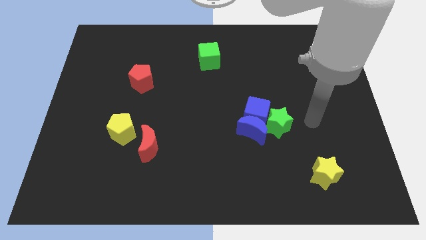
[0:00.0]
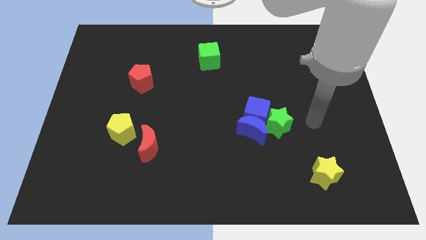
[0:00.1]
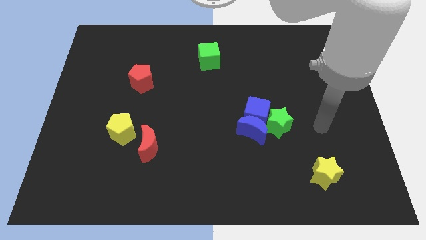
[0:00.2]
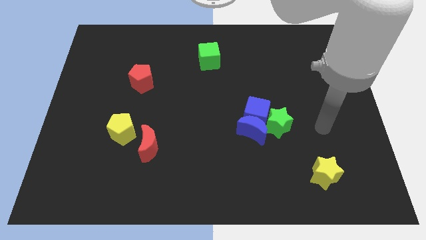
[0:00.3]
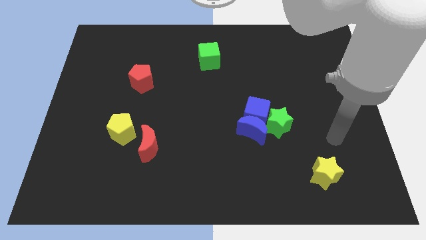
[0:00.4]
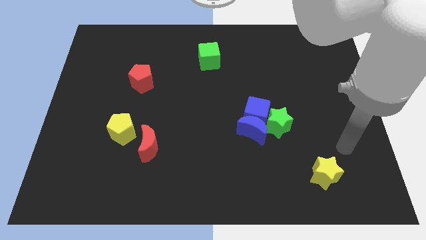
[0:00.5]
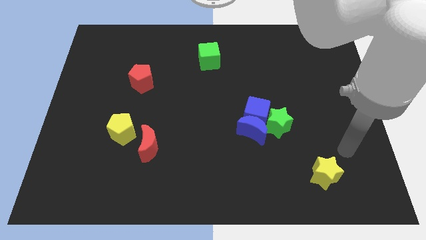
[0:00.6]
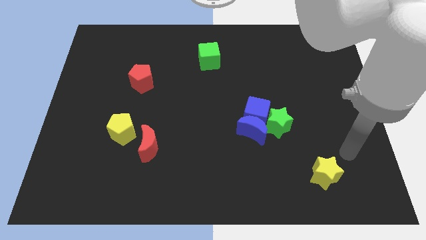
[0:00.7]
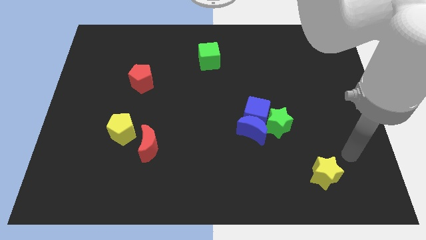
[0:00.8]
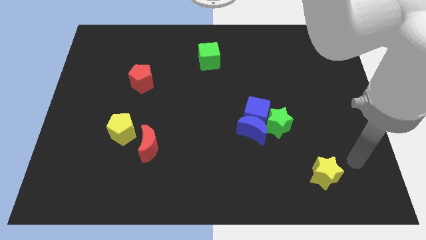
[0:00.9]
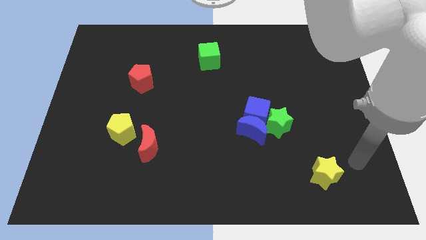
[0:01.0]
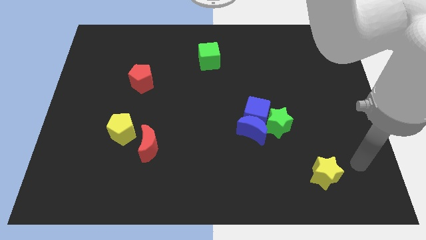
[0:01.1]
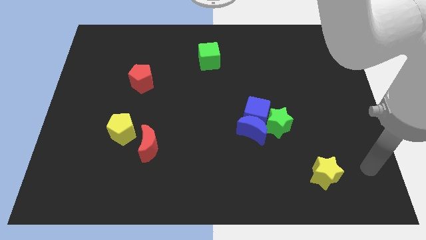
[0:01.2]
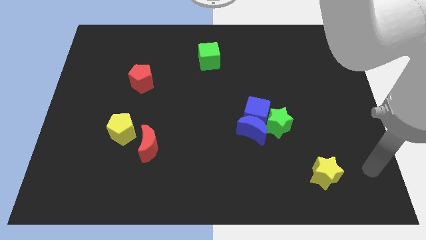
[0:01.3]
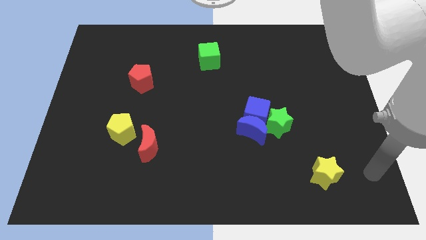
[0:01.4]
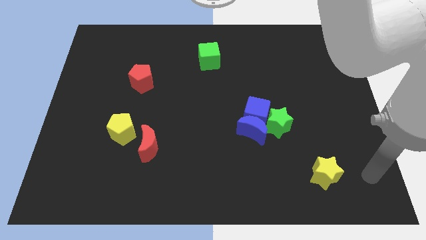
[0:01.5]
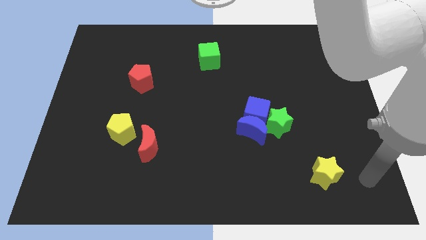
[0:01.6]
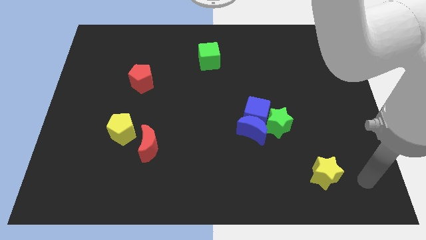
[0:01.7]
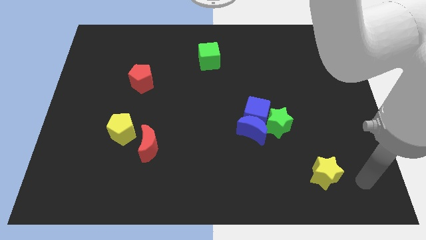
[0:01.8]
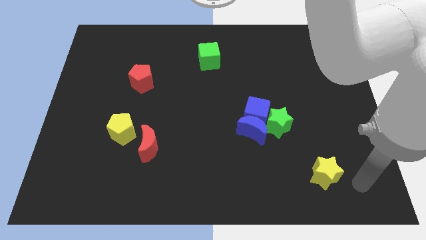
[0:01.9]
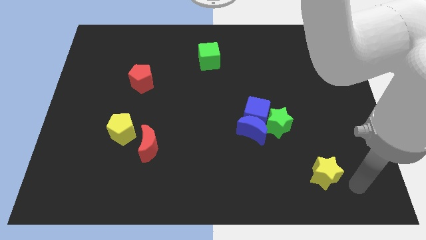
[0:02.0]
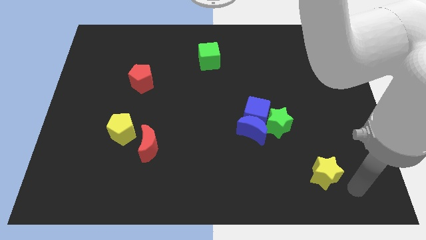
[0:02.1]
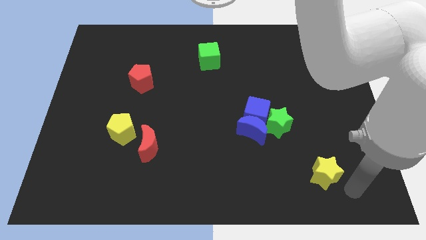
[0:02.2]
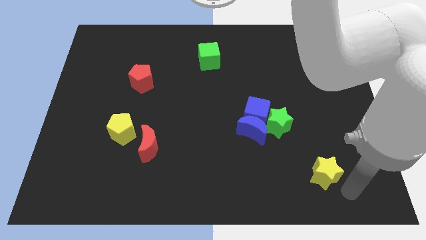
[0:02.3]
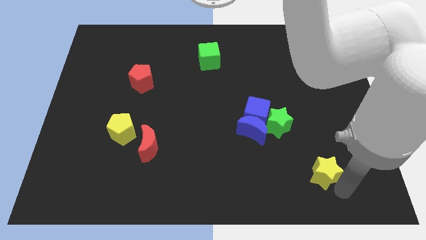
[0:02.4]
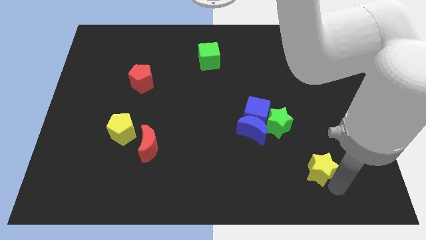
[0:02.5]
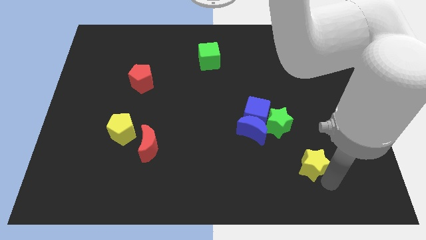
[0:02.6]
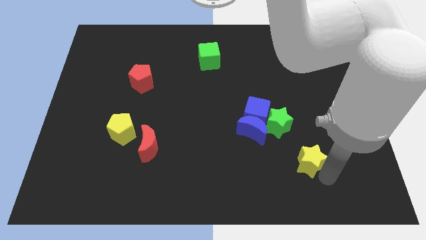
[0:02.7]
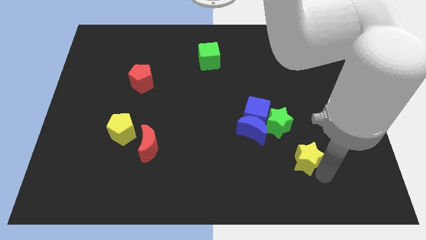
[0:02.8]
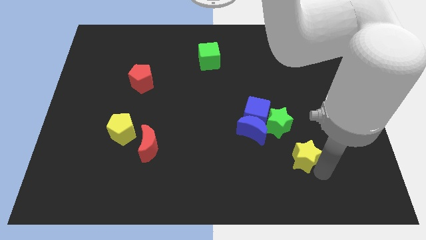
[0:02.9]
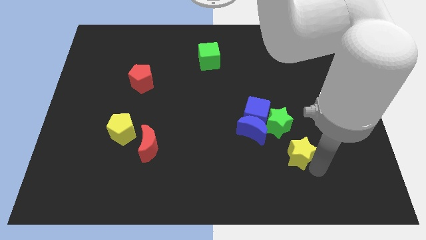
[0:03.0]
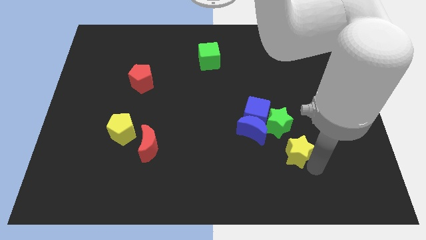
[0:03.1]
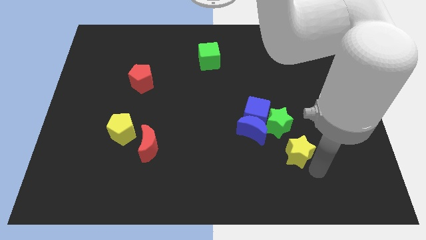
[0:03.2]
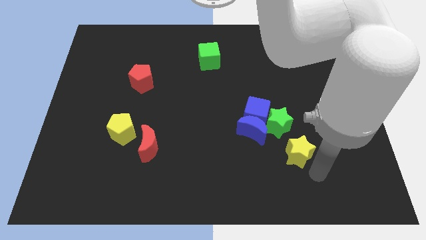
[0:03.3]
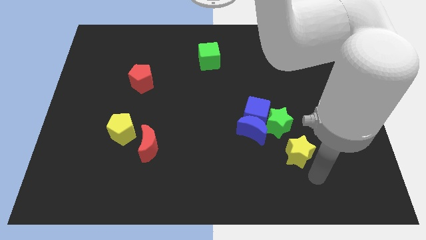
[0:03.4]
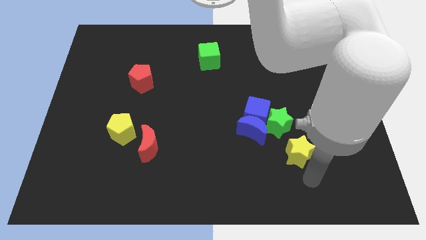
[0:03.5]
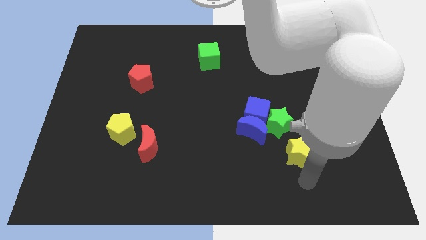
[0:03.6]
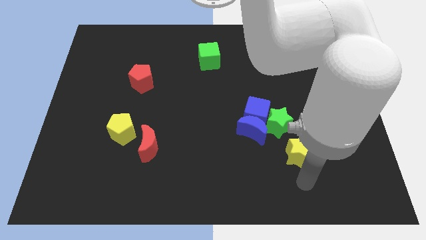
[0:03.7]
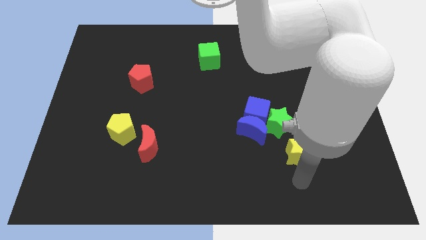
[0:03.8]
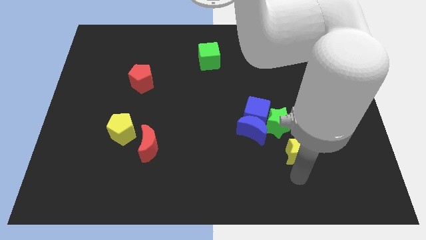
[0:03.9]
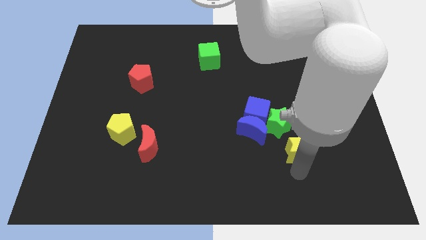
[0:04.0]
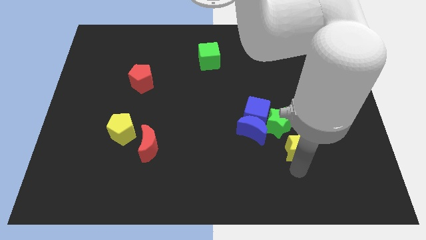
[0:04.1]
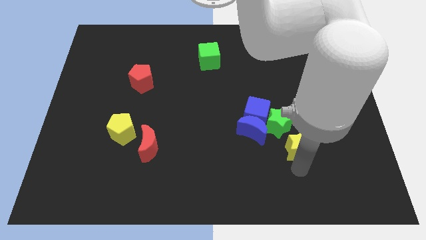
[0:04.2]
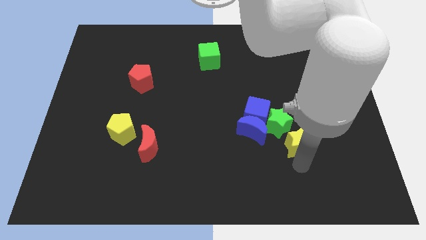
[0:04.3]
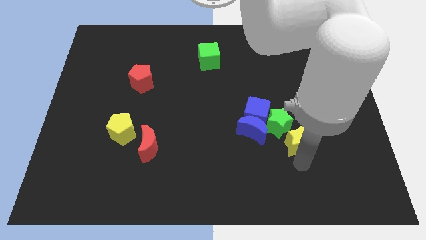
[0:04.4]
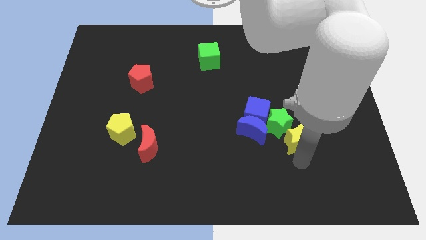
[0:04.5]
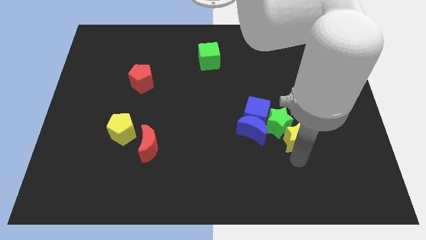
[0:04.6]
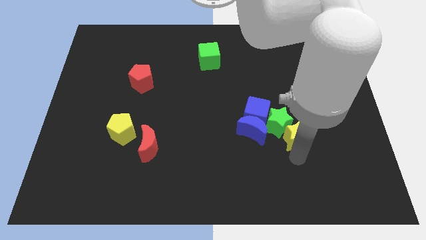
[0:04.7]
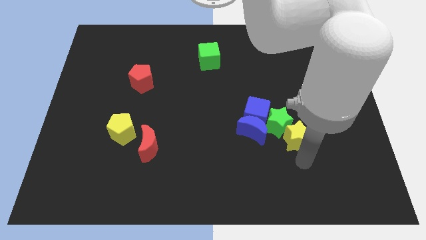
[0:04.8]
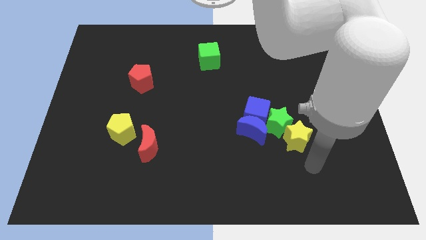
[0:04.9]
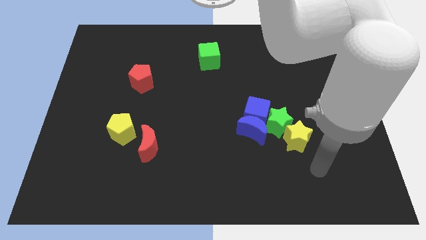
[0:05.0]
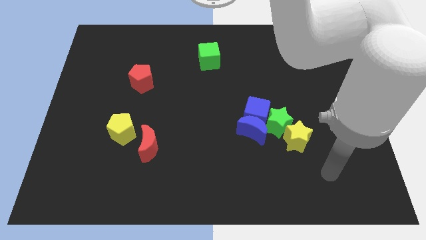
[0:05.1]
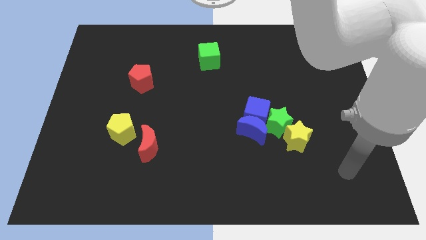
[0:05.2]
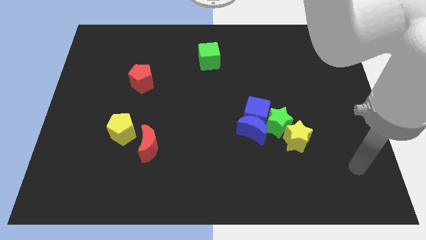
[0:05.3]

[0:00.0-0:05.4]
move the yellow star diagonally to the bottom right of the green star

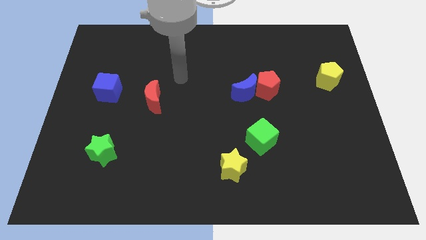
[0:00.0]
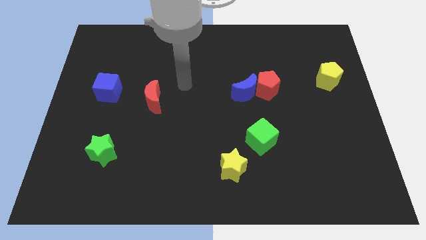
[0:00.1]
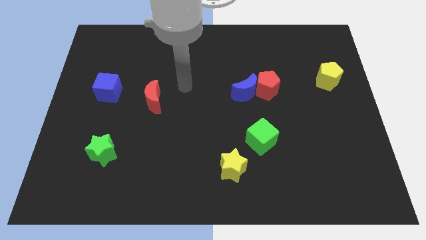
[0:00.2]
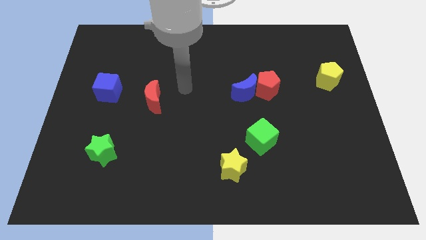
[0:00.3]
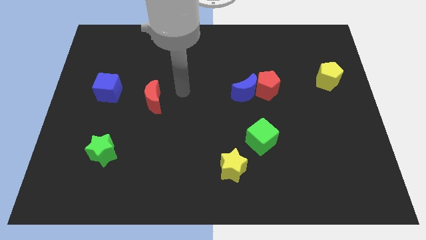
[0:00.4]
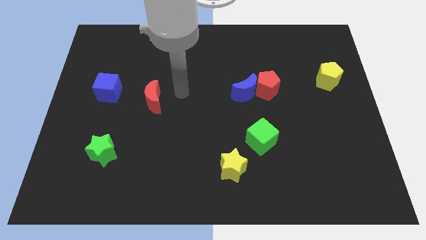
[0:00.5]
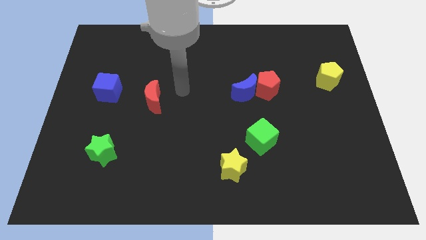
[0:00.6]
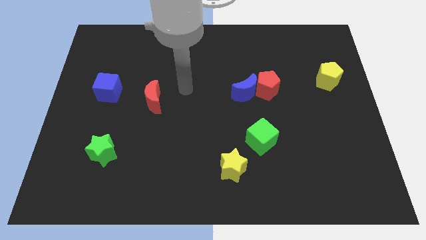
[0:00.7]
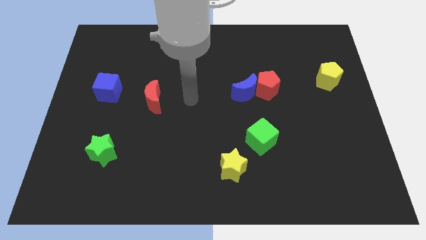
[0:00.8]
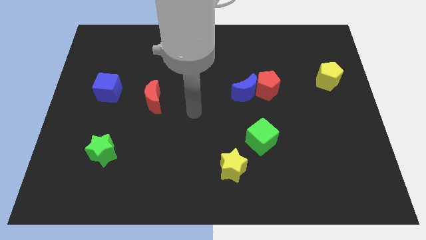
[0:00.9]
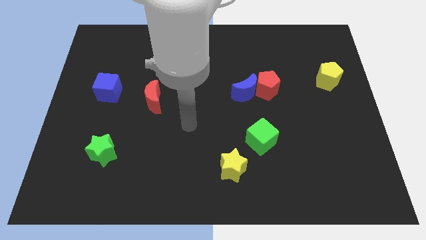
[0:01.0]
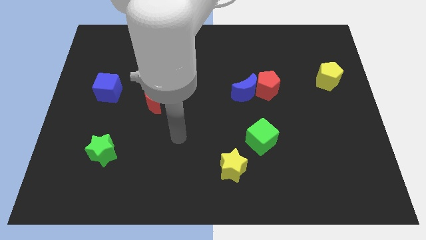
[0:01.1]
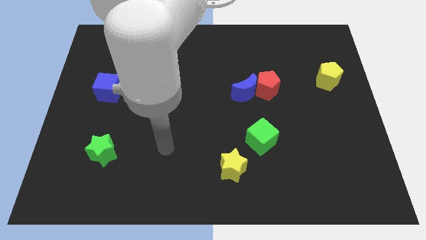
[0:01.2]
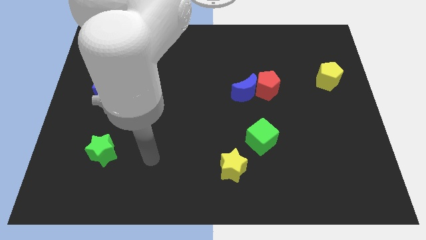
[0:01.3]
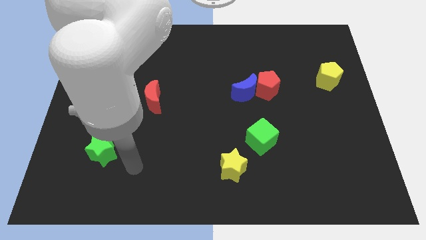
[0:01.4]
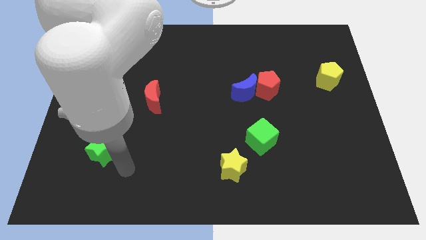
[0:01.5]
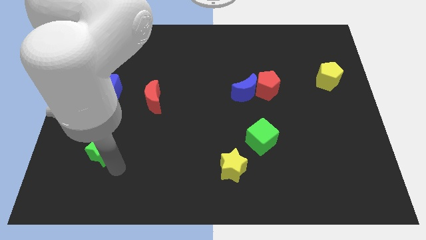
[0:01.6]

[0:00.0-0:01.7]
move the arm towards the bottom of the green star

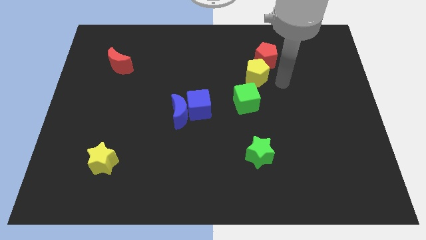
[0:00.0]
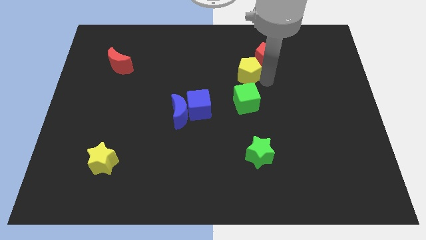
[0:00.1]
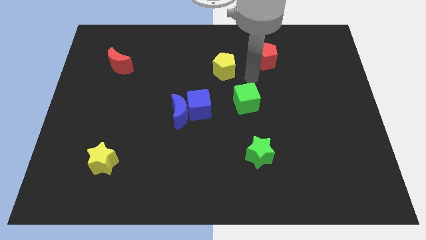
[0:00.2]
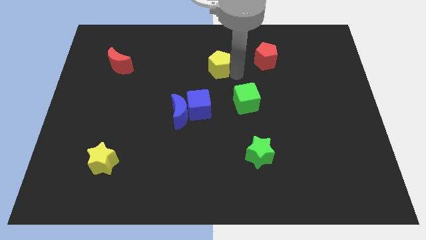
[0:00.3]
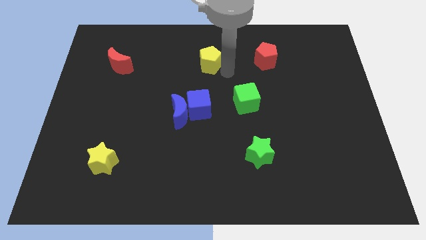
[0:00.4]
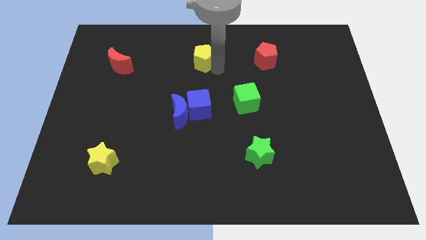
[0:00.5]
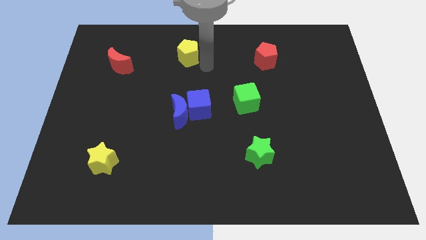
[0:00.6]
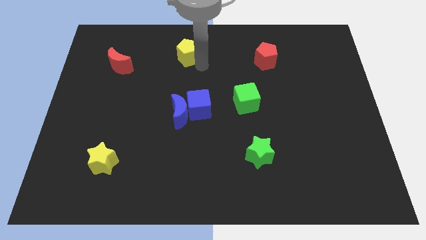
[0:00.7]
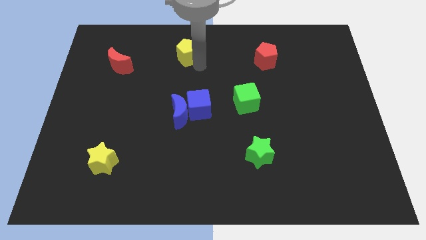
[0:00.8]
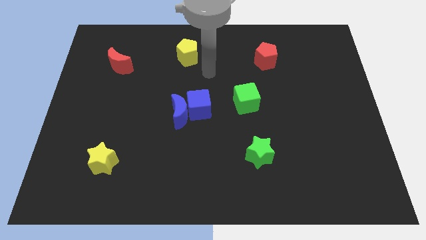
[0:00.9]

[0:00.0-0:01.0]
move the yellow pentagon to the left of the board

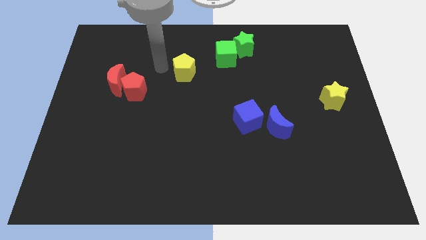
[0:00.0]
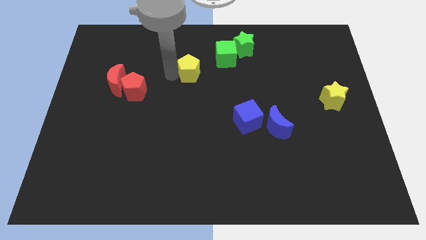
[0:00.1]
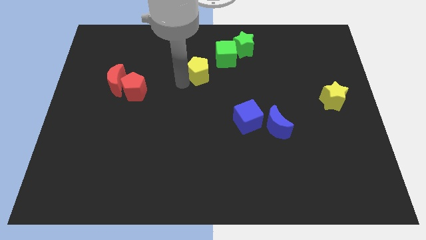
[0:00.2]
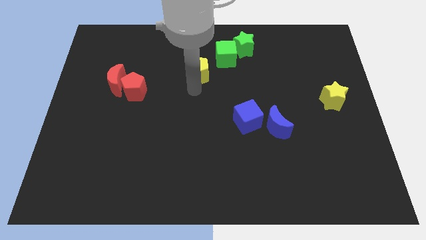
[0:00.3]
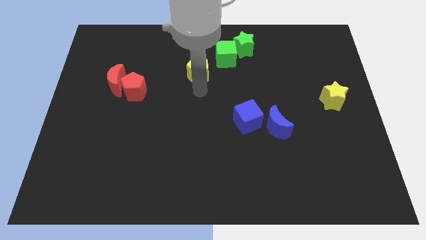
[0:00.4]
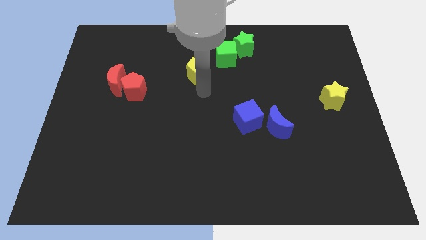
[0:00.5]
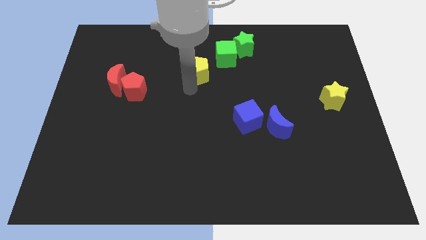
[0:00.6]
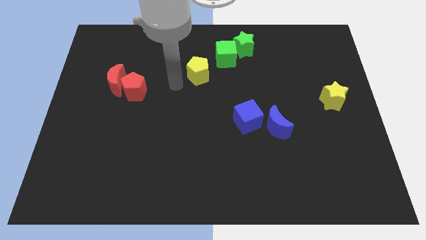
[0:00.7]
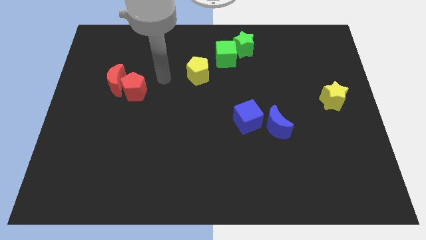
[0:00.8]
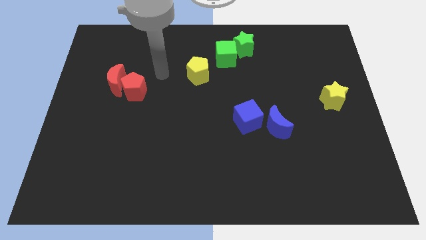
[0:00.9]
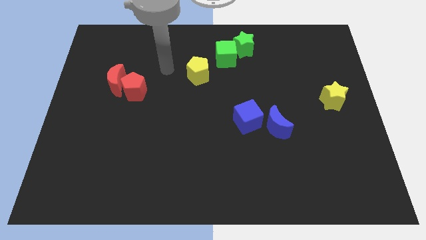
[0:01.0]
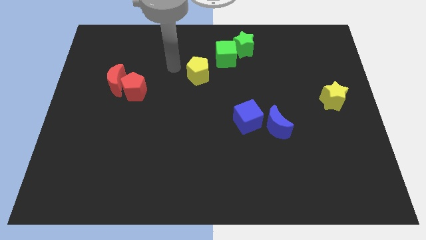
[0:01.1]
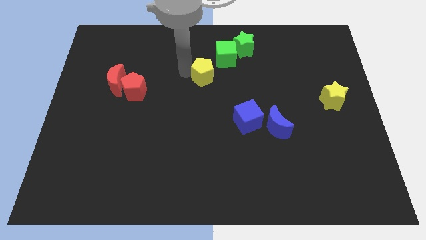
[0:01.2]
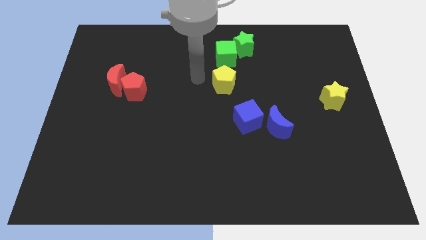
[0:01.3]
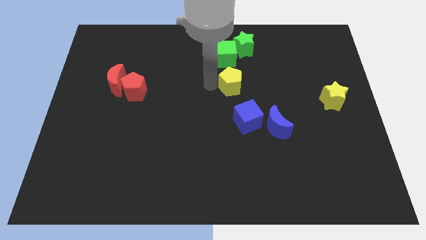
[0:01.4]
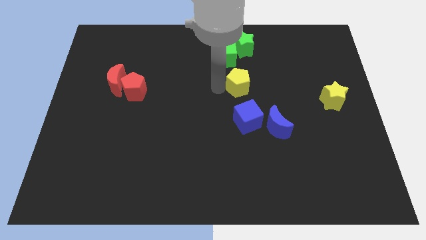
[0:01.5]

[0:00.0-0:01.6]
place yellow pentagon above blue cube
